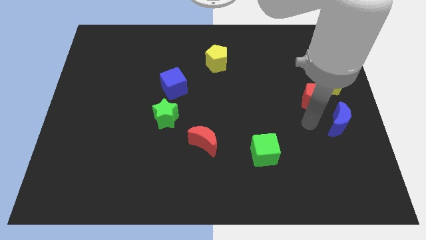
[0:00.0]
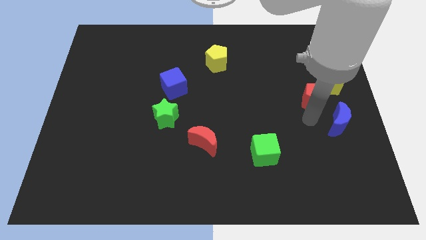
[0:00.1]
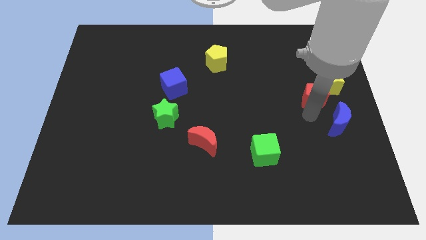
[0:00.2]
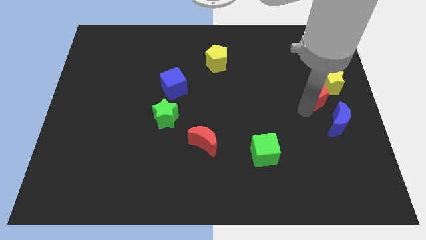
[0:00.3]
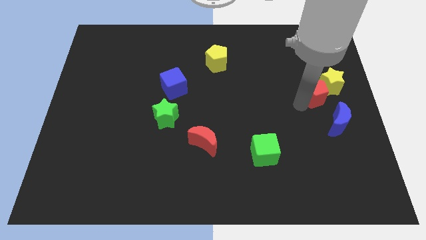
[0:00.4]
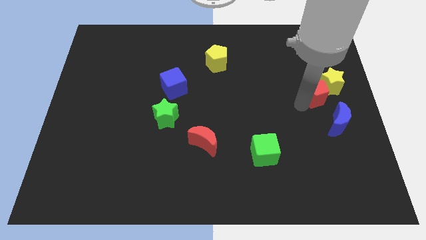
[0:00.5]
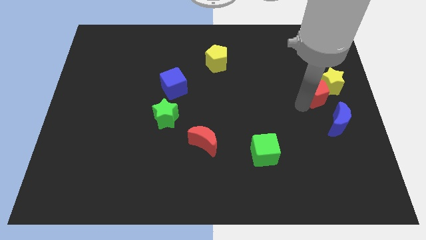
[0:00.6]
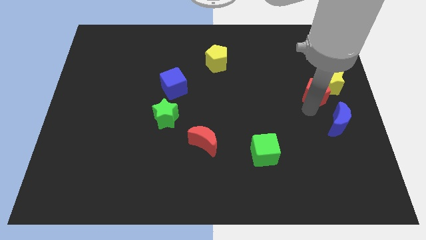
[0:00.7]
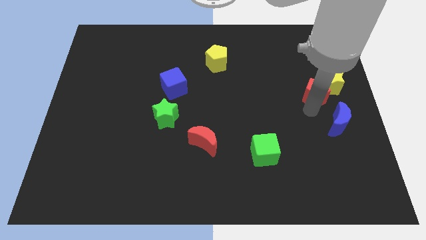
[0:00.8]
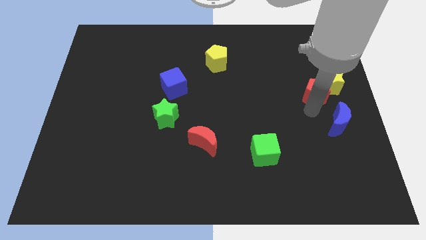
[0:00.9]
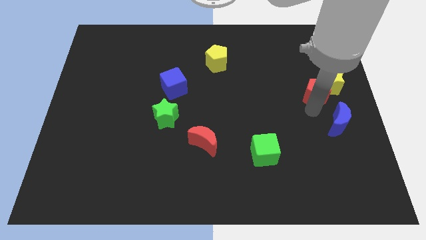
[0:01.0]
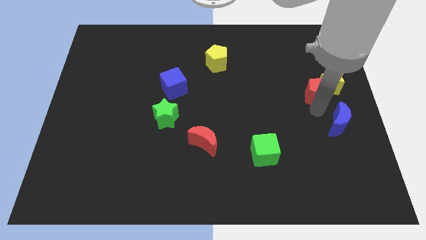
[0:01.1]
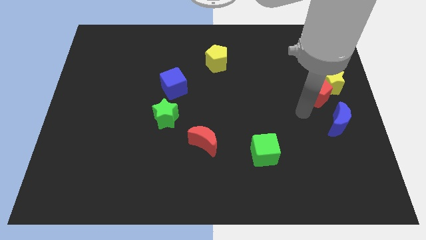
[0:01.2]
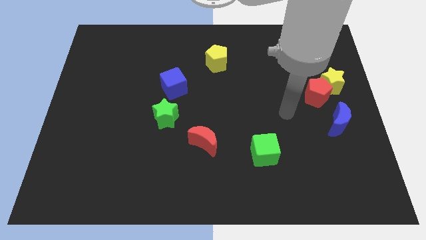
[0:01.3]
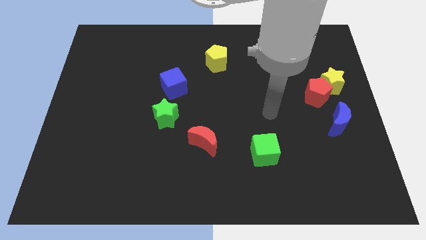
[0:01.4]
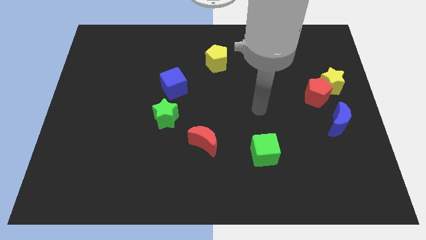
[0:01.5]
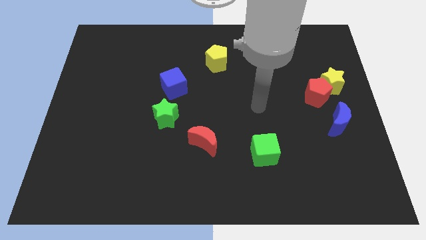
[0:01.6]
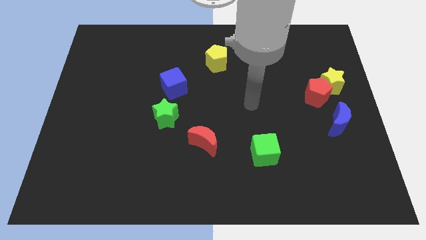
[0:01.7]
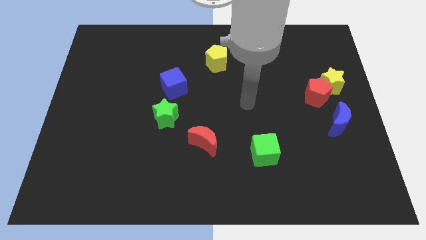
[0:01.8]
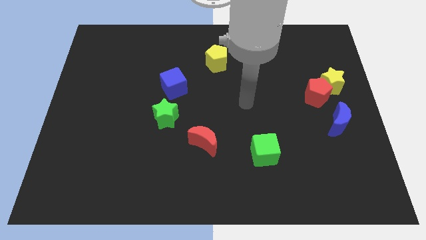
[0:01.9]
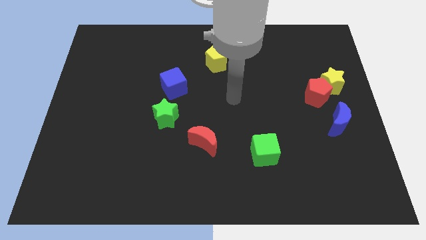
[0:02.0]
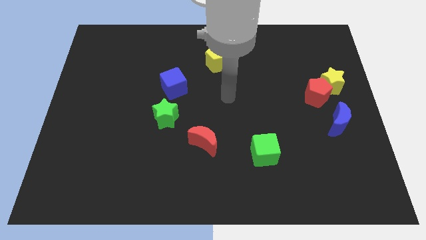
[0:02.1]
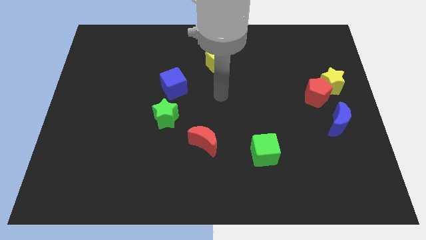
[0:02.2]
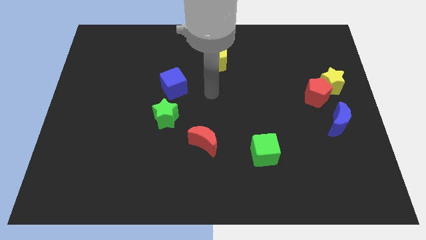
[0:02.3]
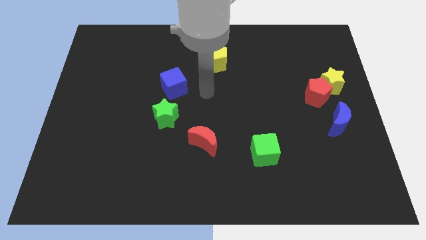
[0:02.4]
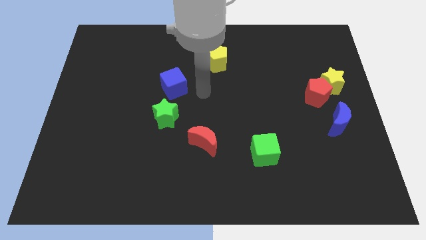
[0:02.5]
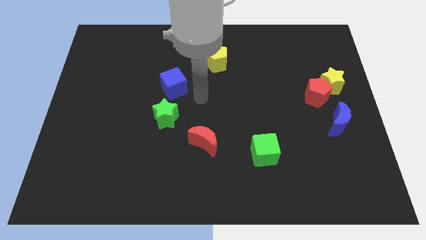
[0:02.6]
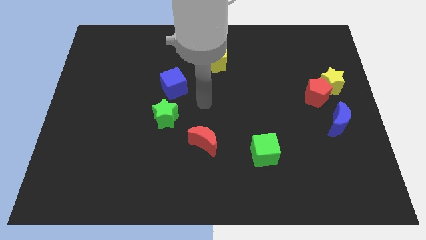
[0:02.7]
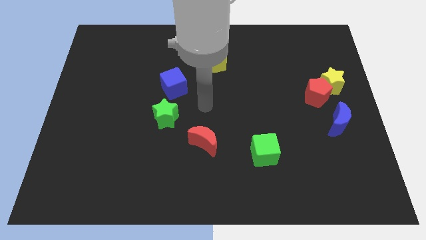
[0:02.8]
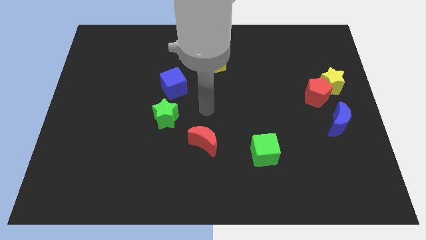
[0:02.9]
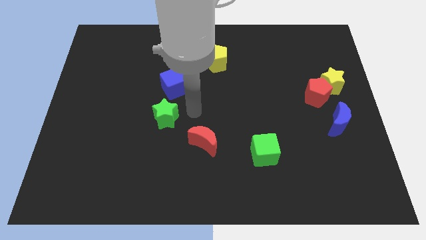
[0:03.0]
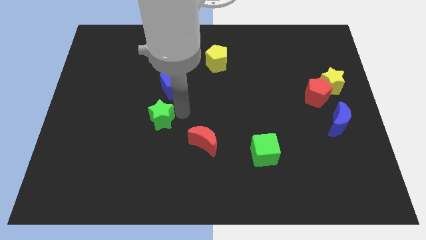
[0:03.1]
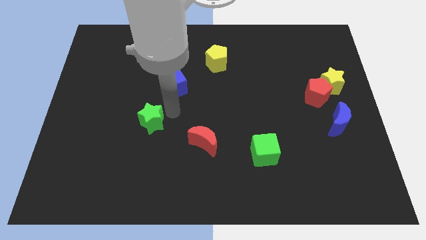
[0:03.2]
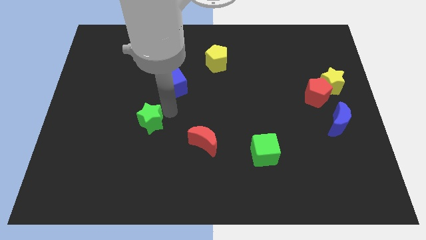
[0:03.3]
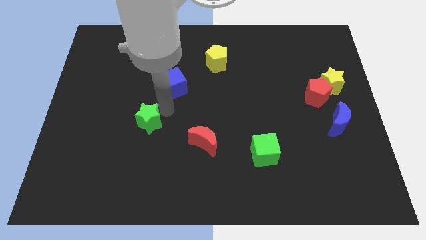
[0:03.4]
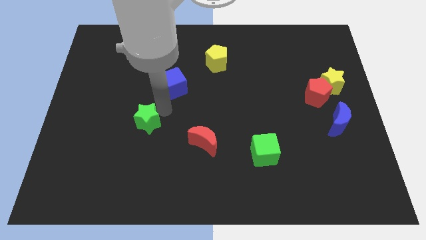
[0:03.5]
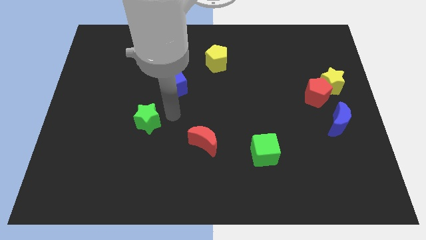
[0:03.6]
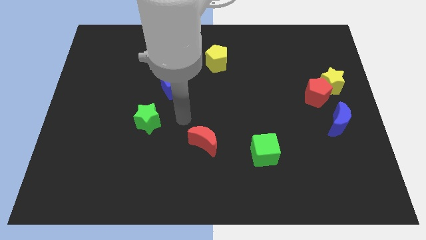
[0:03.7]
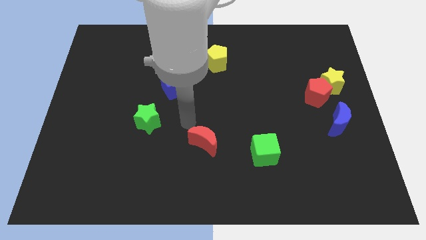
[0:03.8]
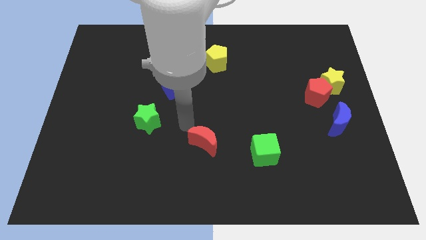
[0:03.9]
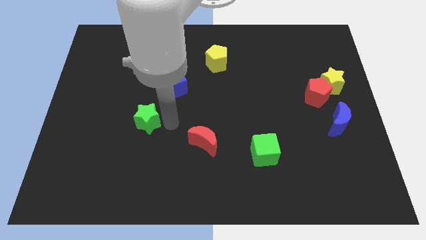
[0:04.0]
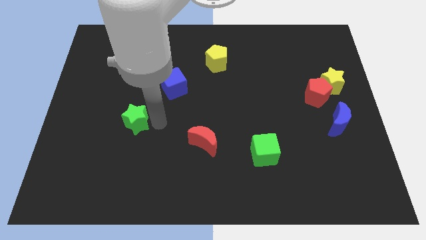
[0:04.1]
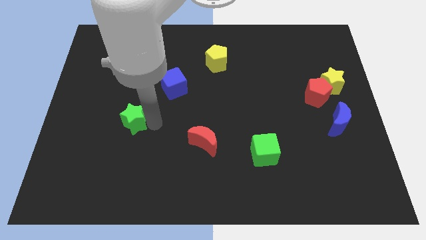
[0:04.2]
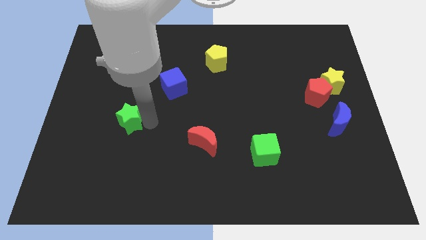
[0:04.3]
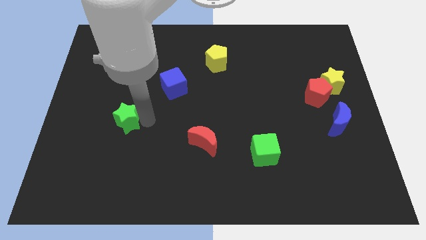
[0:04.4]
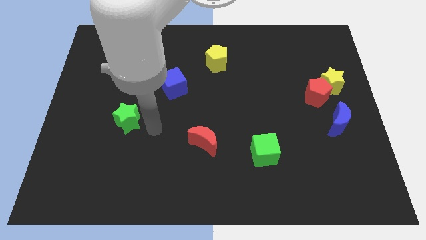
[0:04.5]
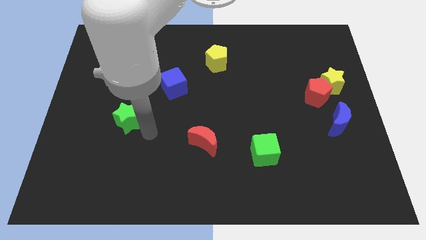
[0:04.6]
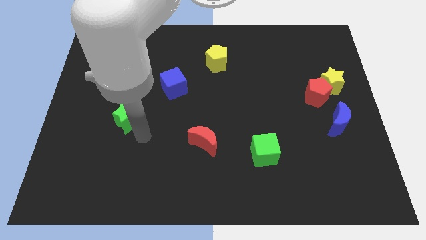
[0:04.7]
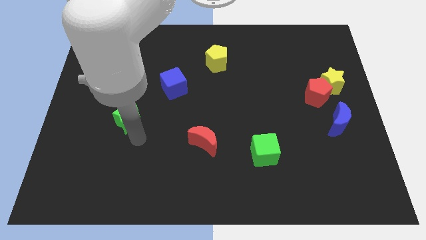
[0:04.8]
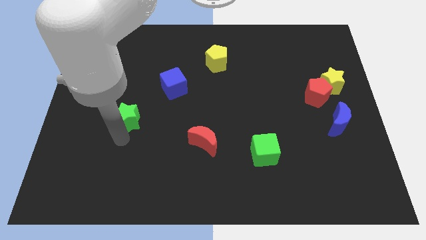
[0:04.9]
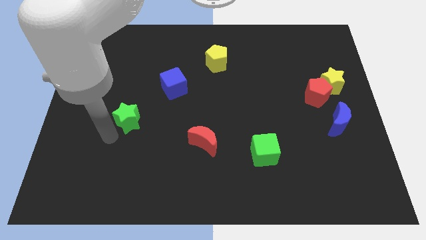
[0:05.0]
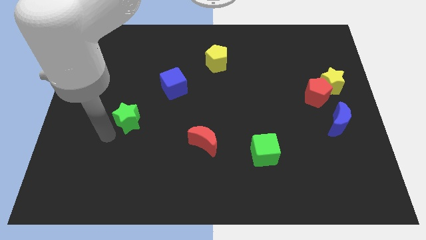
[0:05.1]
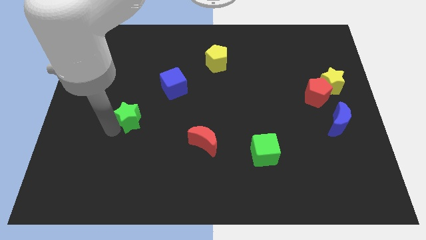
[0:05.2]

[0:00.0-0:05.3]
push the red pentagon and green star

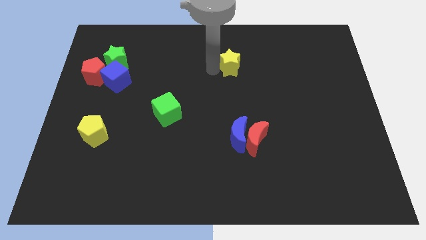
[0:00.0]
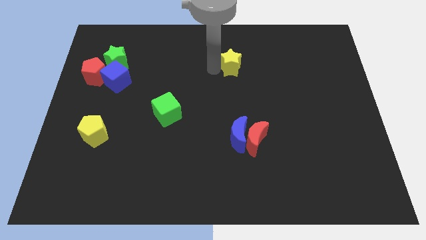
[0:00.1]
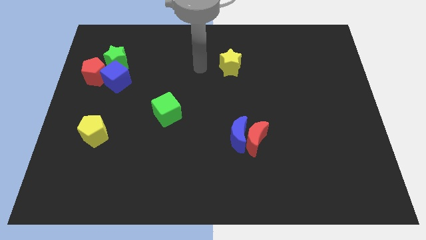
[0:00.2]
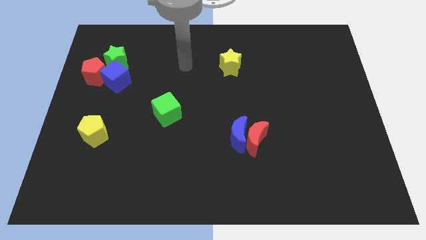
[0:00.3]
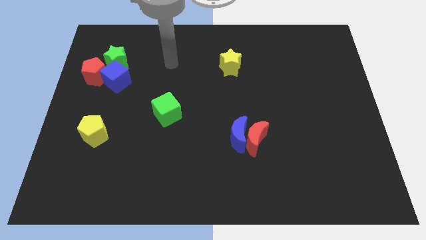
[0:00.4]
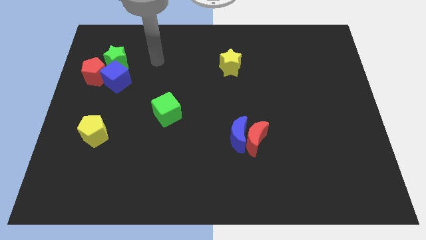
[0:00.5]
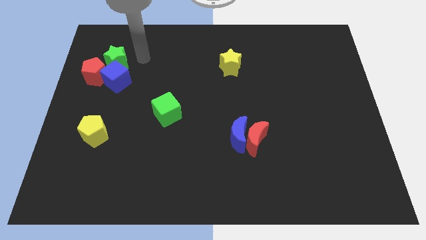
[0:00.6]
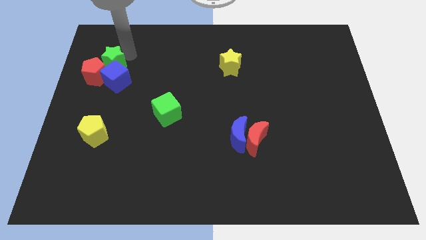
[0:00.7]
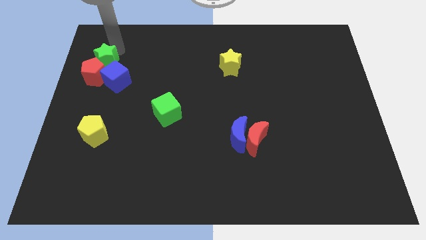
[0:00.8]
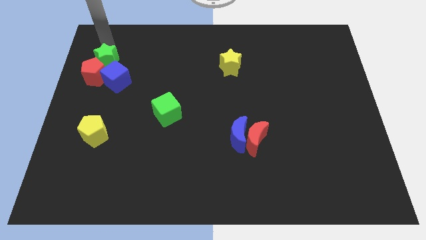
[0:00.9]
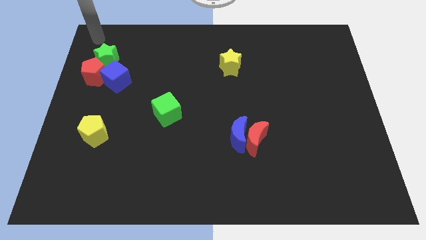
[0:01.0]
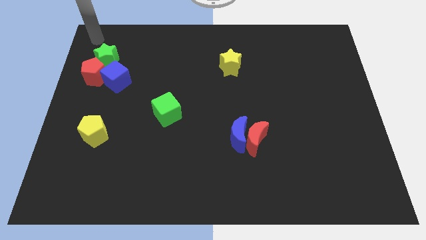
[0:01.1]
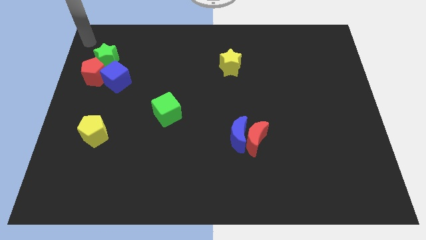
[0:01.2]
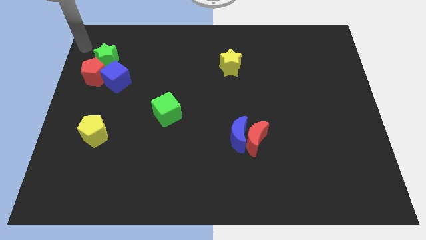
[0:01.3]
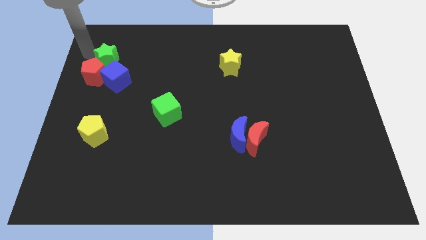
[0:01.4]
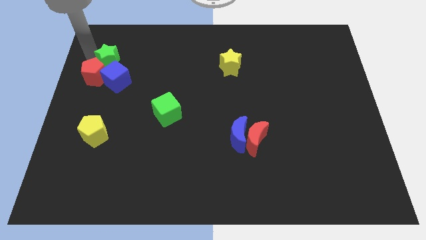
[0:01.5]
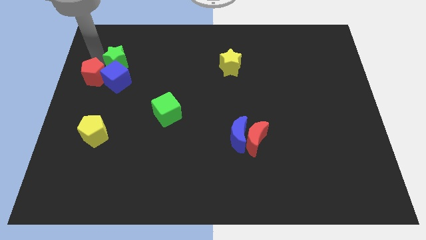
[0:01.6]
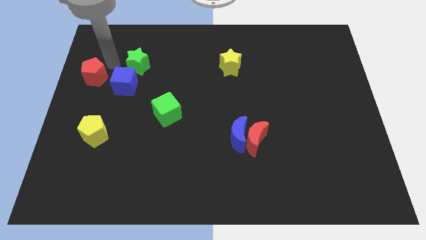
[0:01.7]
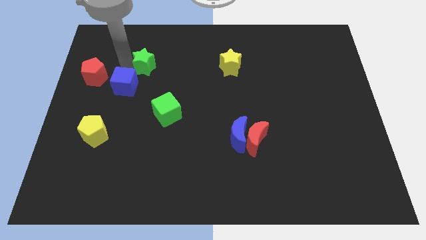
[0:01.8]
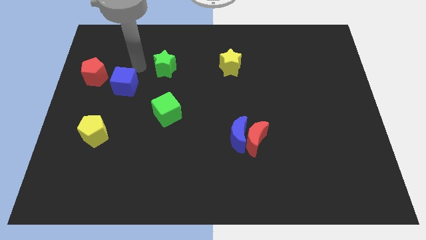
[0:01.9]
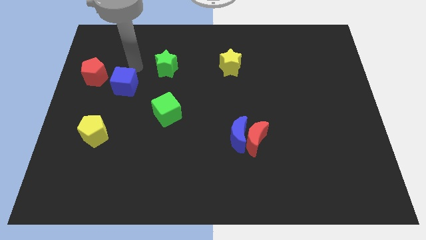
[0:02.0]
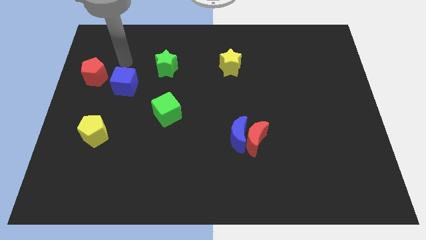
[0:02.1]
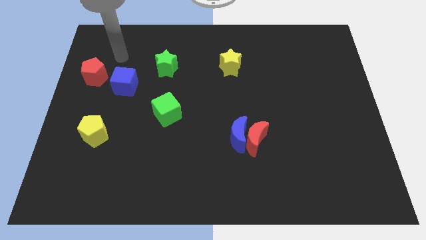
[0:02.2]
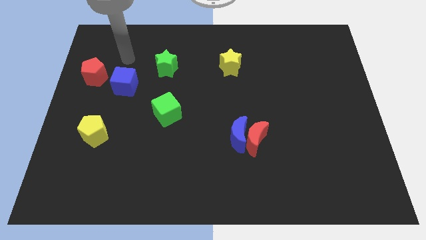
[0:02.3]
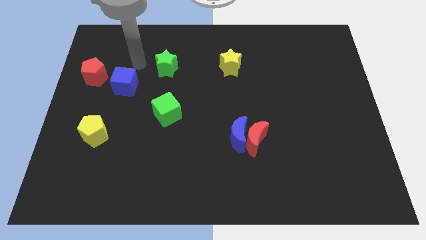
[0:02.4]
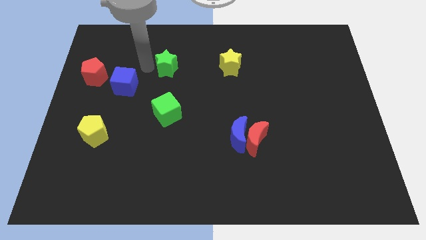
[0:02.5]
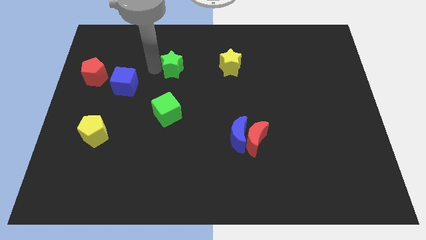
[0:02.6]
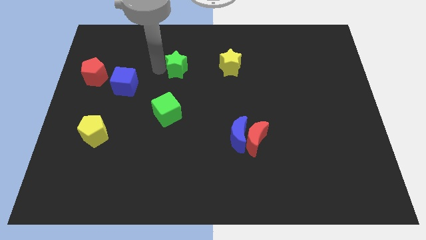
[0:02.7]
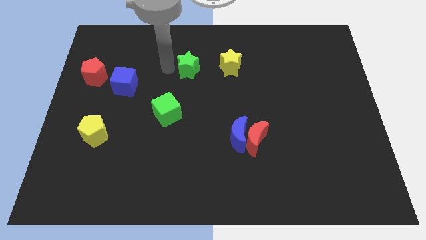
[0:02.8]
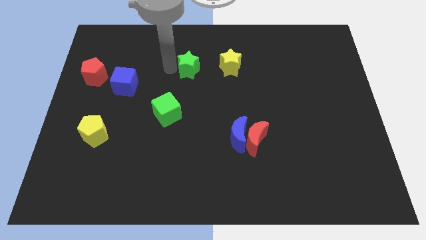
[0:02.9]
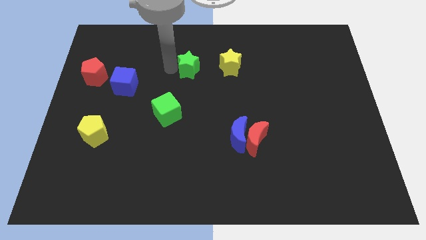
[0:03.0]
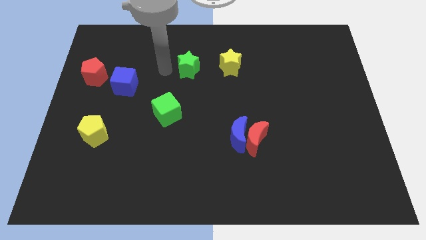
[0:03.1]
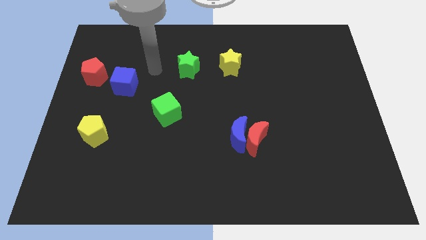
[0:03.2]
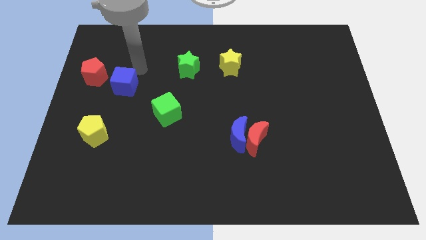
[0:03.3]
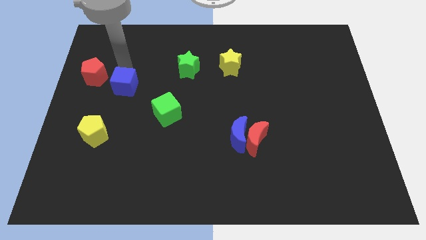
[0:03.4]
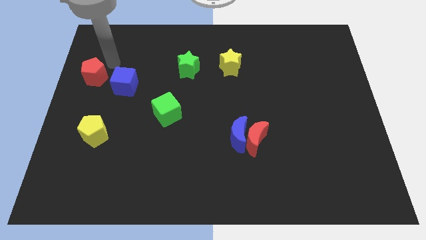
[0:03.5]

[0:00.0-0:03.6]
move the green star left beside the yellow star

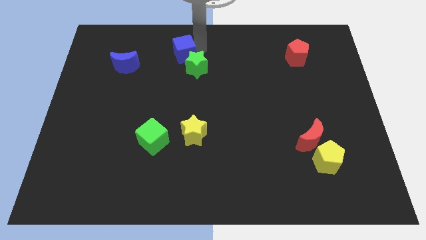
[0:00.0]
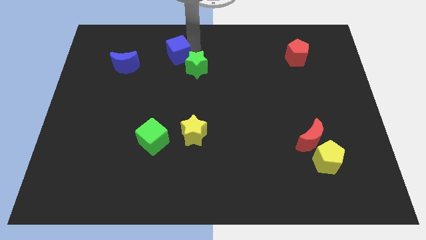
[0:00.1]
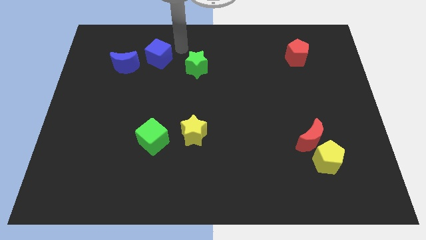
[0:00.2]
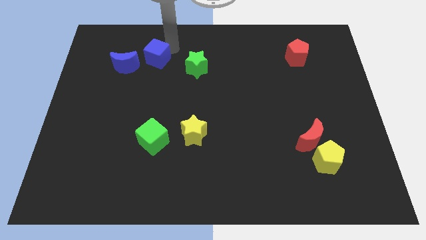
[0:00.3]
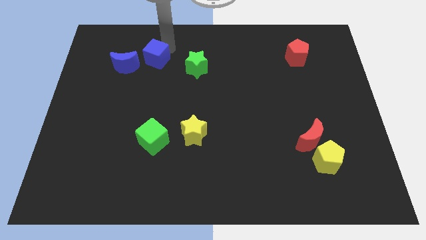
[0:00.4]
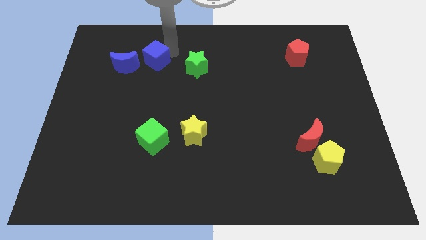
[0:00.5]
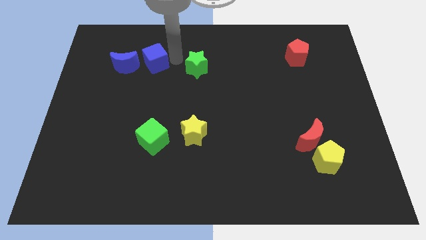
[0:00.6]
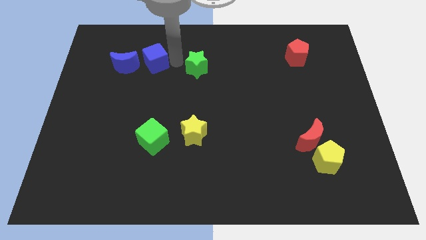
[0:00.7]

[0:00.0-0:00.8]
put the blue cube in between the blue moon and green star
